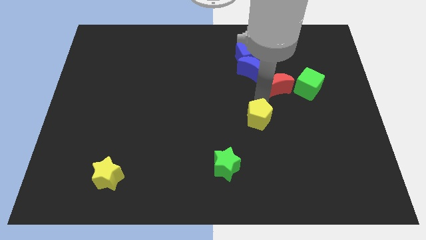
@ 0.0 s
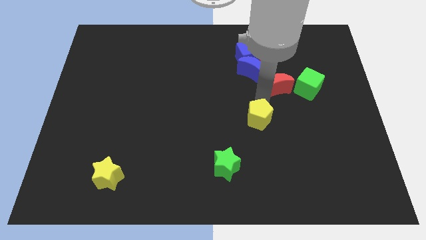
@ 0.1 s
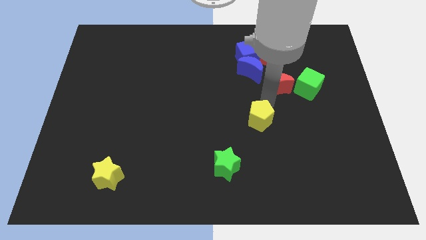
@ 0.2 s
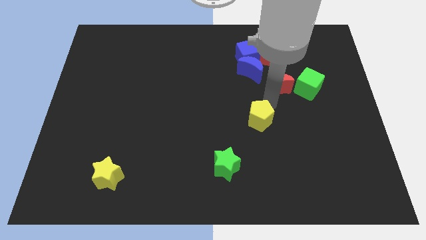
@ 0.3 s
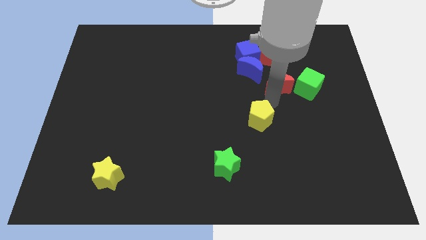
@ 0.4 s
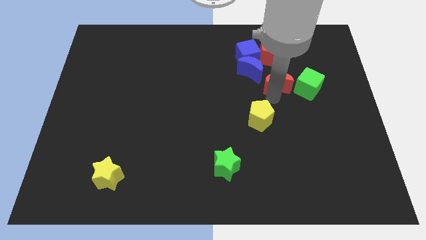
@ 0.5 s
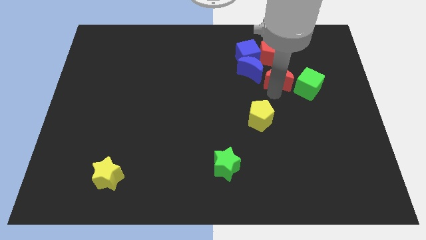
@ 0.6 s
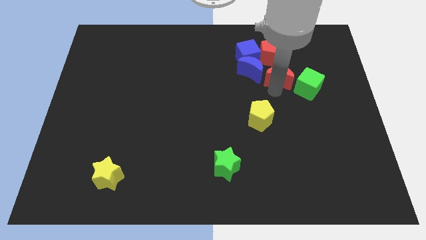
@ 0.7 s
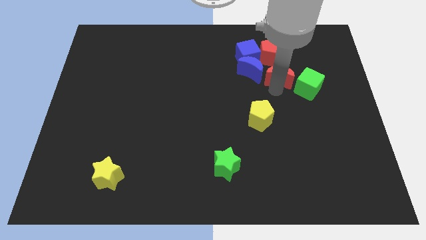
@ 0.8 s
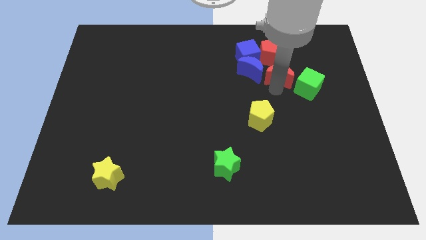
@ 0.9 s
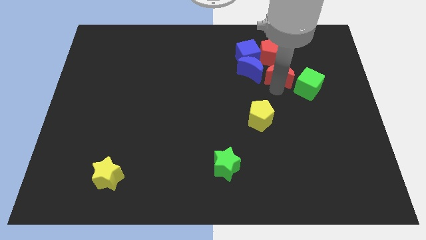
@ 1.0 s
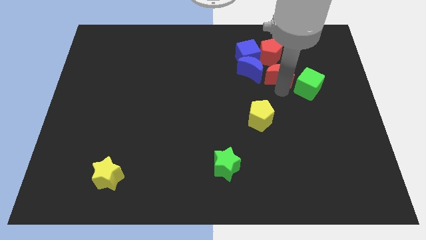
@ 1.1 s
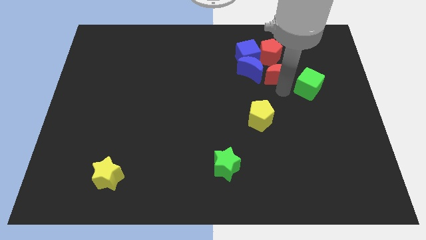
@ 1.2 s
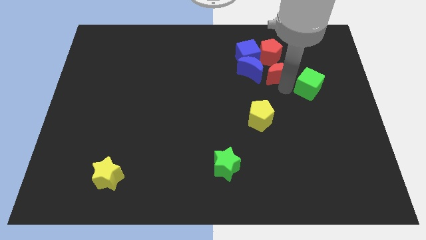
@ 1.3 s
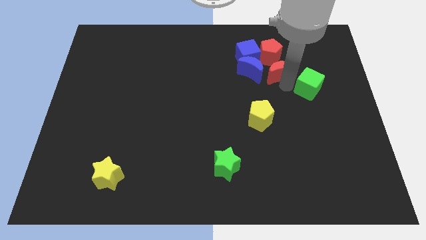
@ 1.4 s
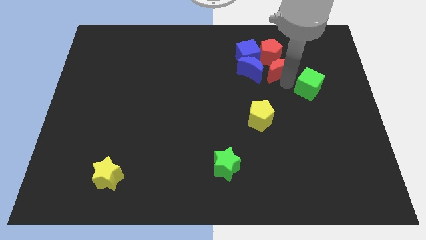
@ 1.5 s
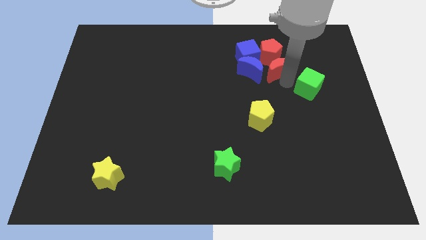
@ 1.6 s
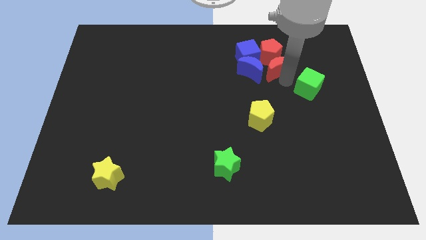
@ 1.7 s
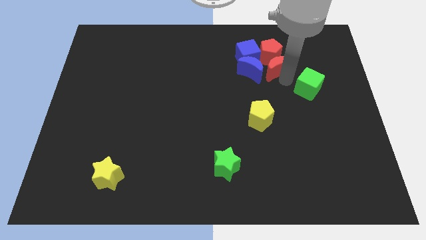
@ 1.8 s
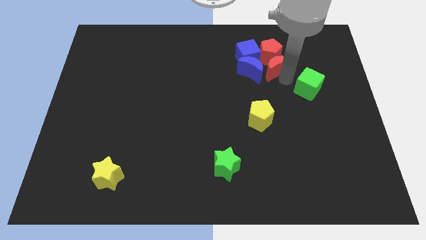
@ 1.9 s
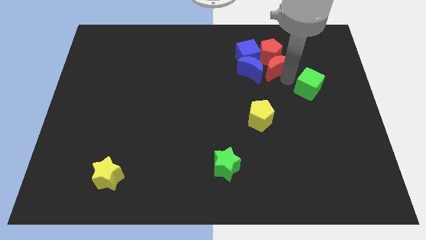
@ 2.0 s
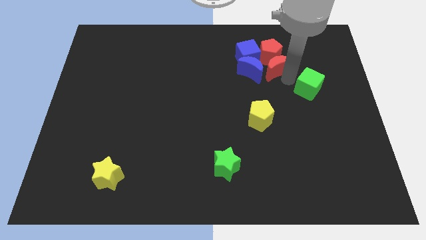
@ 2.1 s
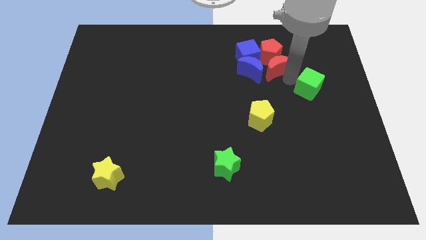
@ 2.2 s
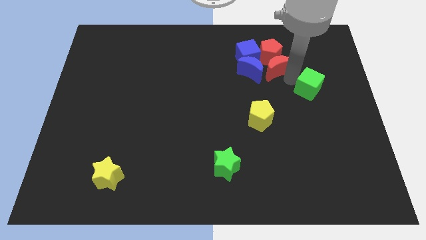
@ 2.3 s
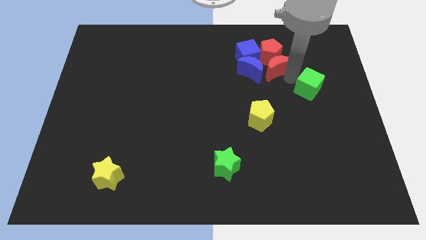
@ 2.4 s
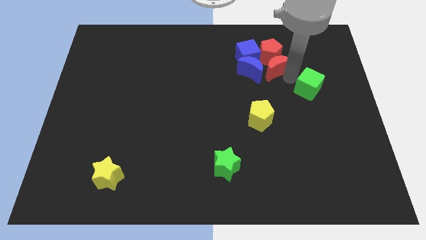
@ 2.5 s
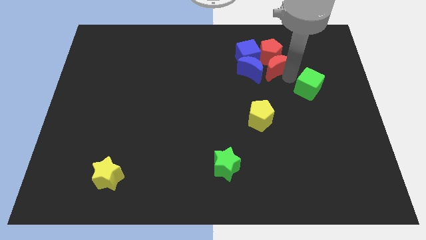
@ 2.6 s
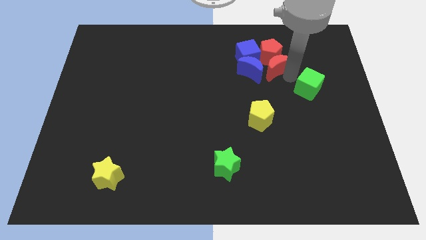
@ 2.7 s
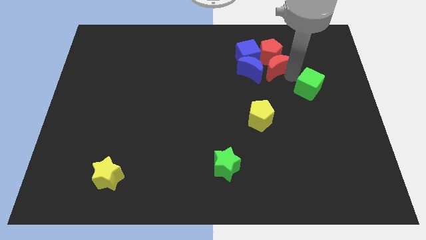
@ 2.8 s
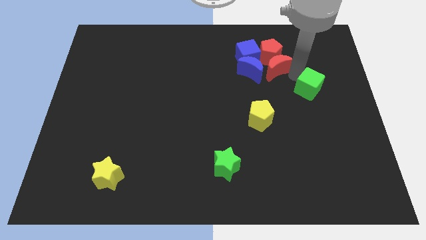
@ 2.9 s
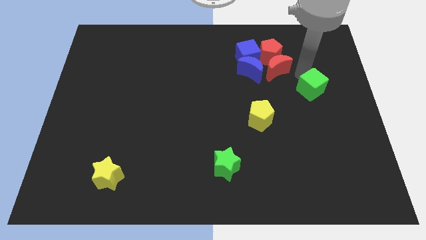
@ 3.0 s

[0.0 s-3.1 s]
slide the red pentagon diagonally to the green star

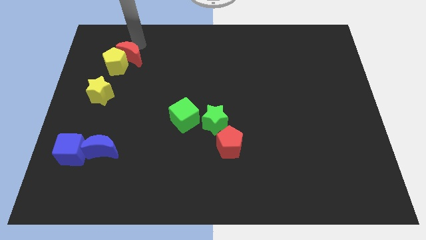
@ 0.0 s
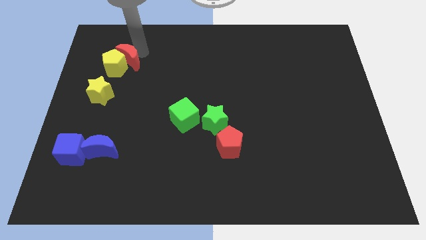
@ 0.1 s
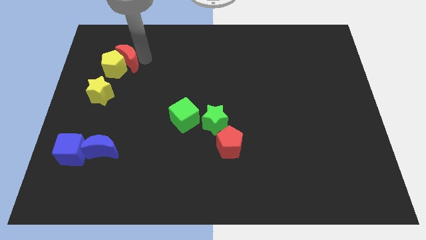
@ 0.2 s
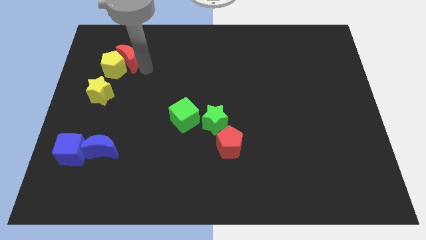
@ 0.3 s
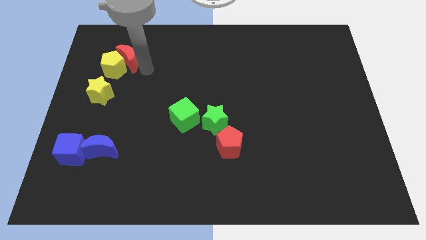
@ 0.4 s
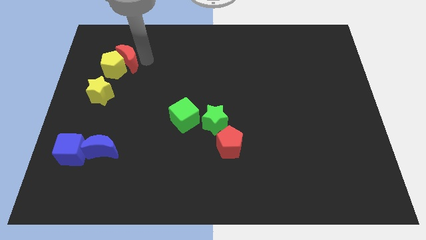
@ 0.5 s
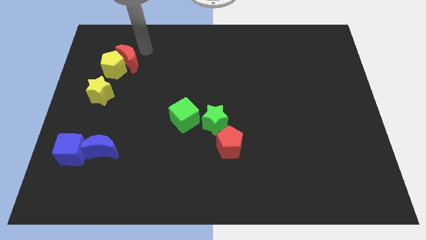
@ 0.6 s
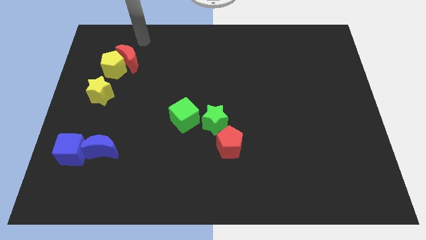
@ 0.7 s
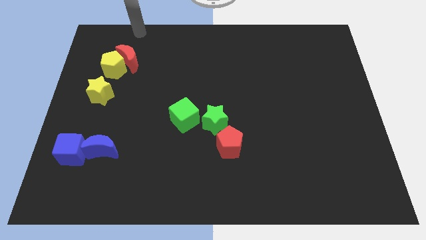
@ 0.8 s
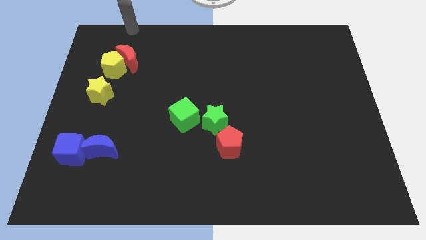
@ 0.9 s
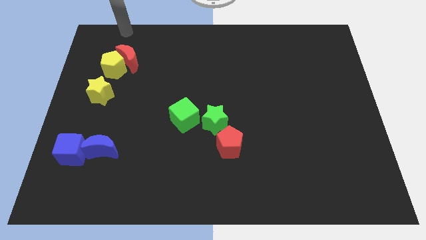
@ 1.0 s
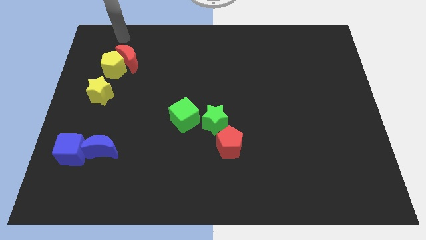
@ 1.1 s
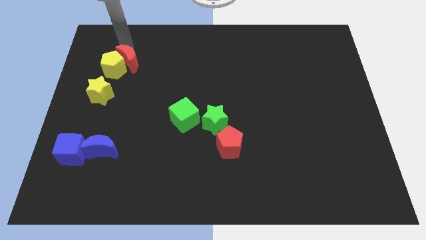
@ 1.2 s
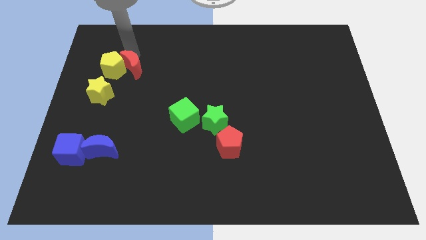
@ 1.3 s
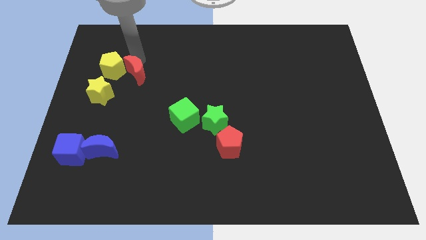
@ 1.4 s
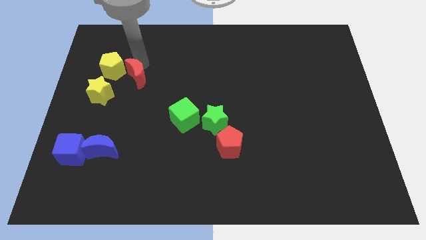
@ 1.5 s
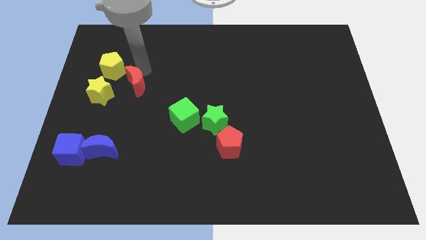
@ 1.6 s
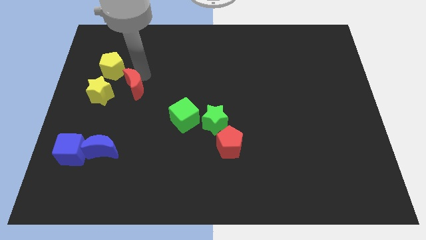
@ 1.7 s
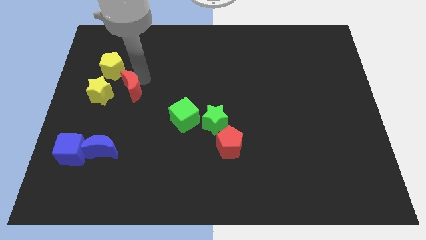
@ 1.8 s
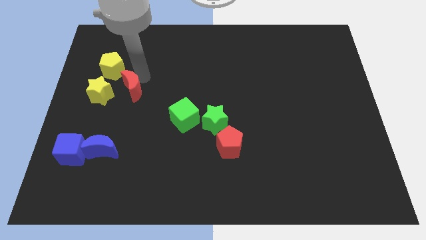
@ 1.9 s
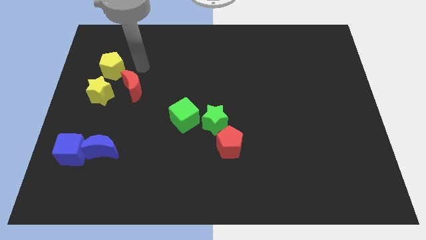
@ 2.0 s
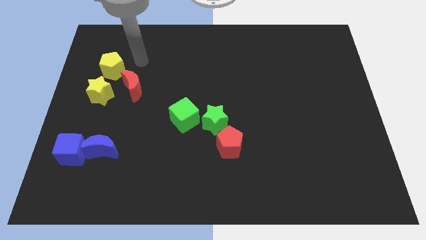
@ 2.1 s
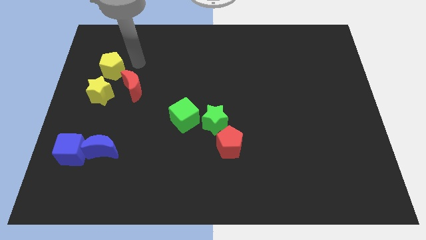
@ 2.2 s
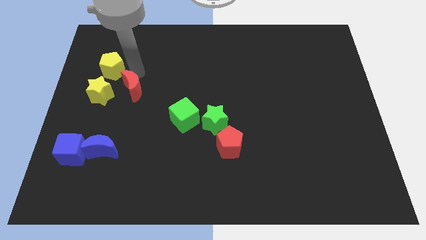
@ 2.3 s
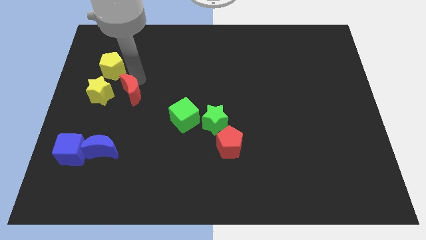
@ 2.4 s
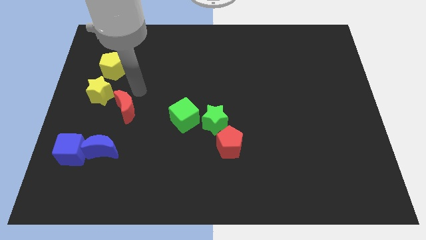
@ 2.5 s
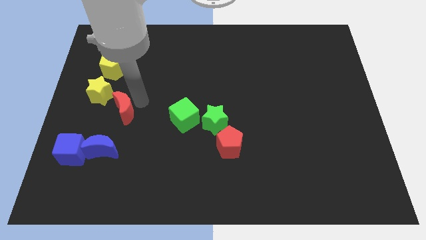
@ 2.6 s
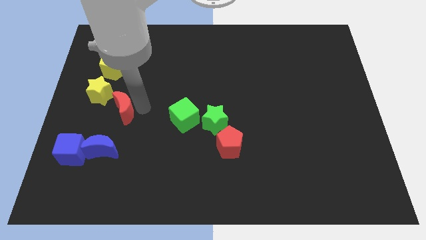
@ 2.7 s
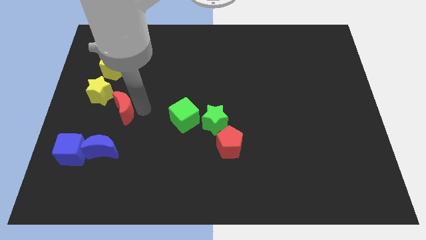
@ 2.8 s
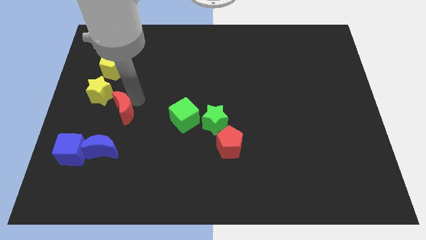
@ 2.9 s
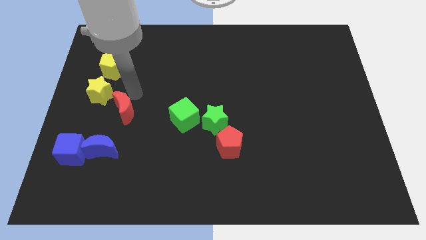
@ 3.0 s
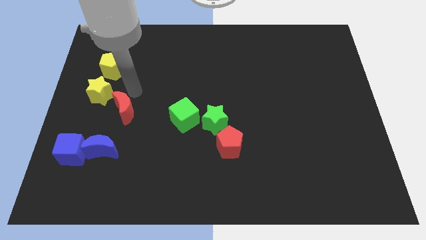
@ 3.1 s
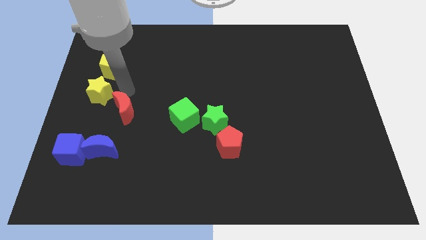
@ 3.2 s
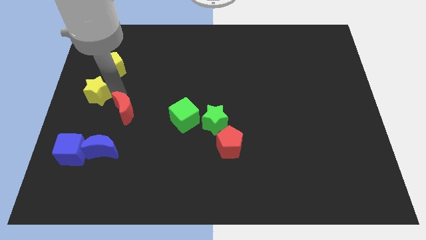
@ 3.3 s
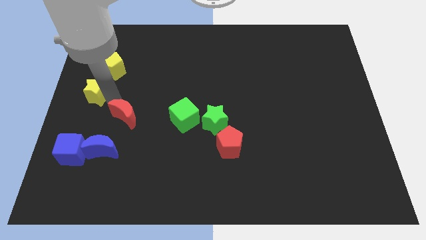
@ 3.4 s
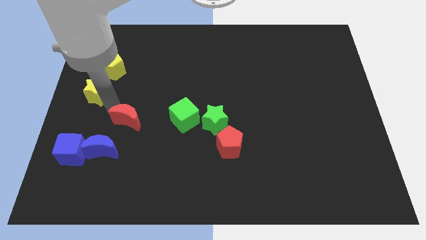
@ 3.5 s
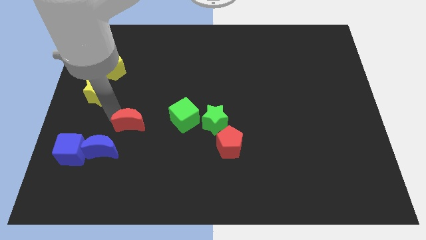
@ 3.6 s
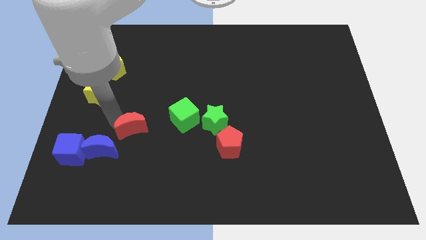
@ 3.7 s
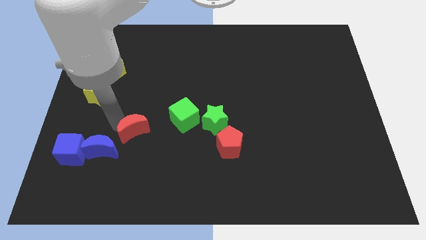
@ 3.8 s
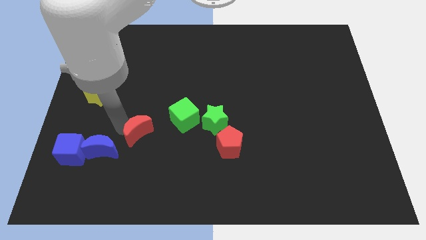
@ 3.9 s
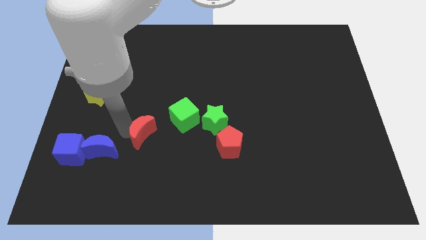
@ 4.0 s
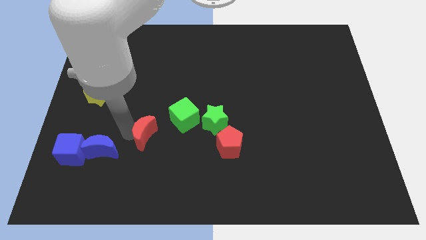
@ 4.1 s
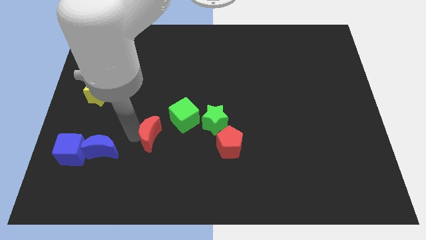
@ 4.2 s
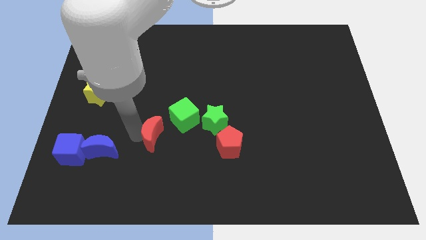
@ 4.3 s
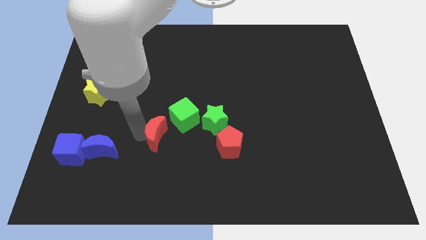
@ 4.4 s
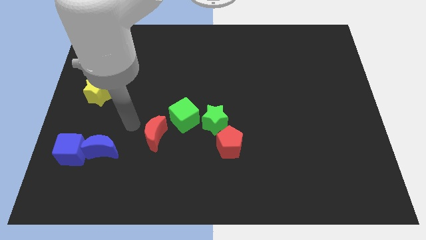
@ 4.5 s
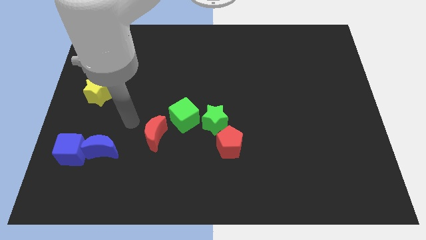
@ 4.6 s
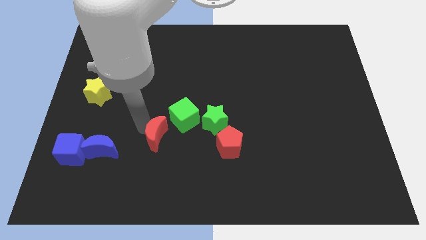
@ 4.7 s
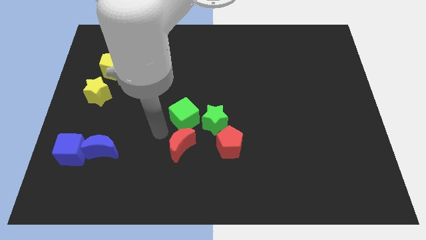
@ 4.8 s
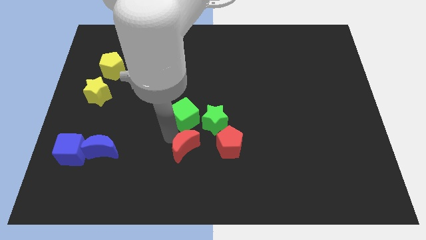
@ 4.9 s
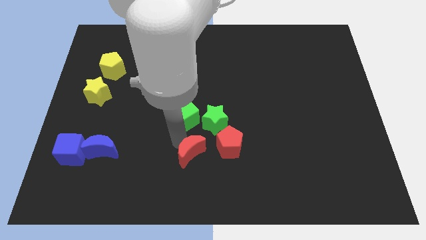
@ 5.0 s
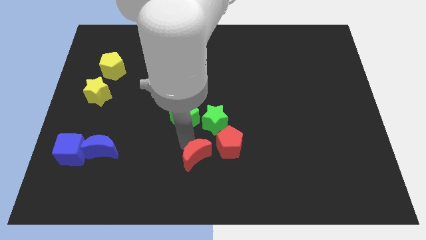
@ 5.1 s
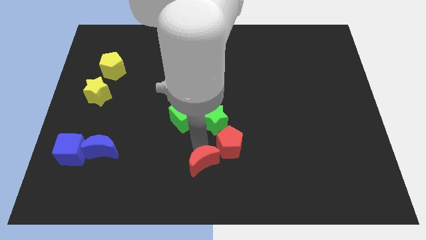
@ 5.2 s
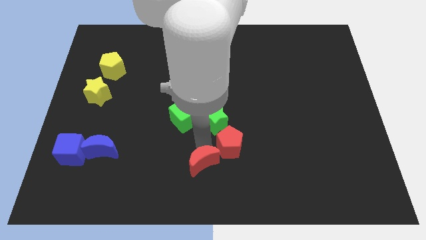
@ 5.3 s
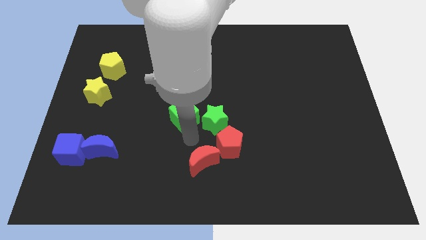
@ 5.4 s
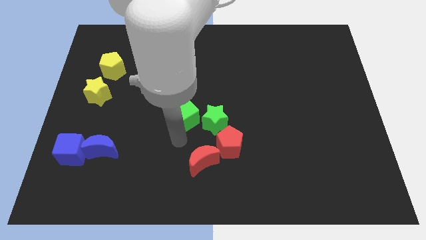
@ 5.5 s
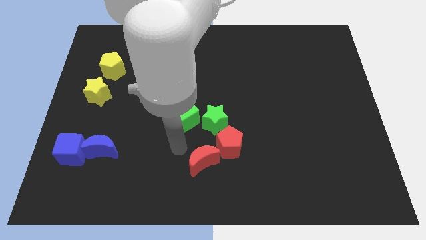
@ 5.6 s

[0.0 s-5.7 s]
move the red crescent near to the red pentagon
